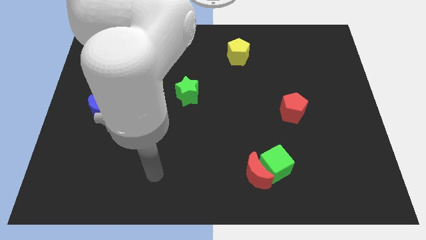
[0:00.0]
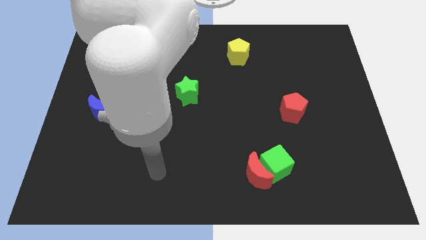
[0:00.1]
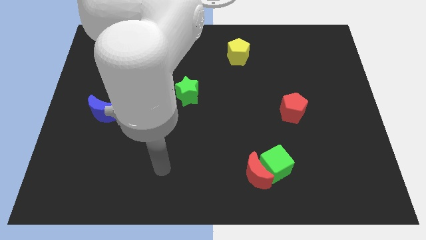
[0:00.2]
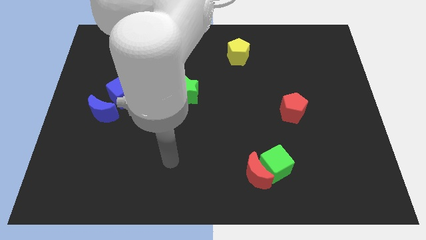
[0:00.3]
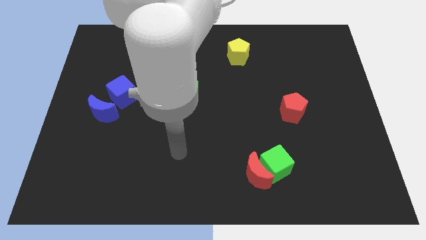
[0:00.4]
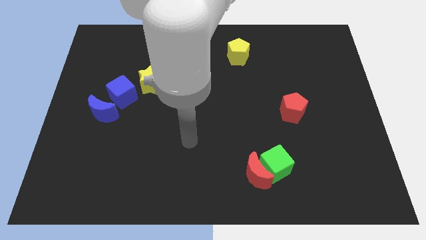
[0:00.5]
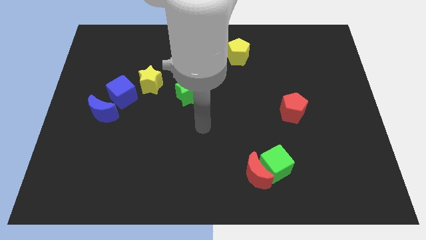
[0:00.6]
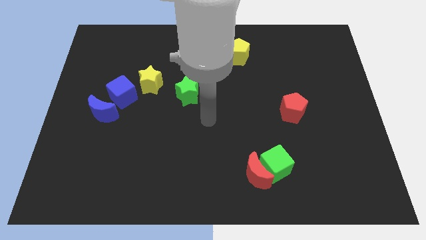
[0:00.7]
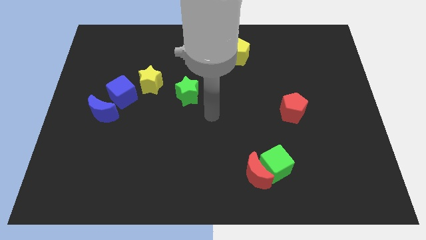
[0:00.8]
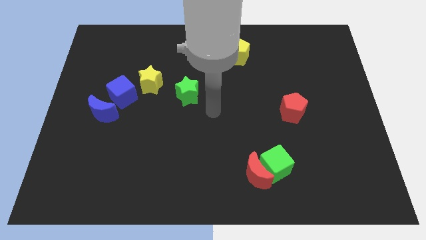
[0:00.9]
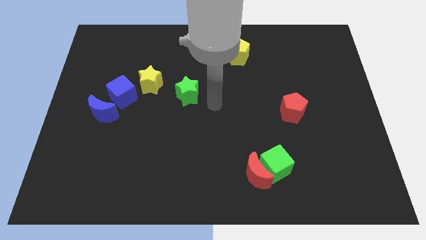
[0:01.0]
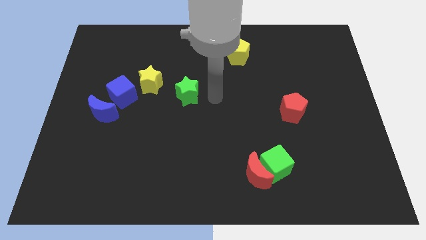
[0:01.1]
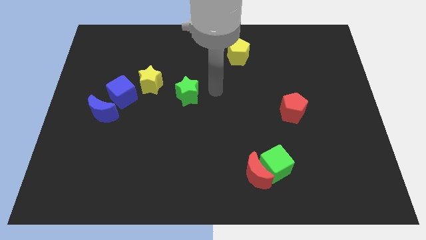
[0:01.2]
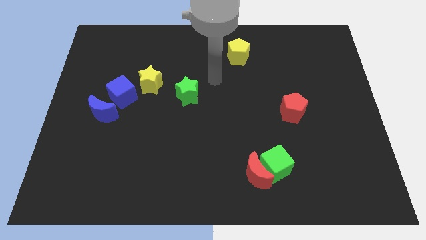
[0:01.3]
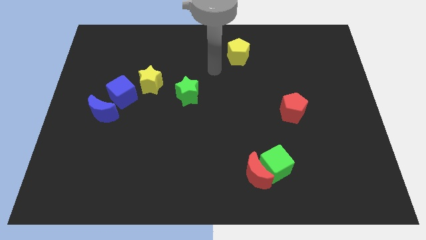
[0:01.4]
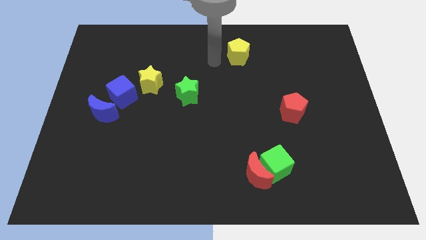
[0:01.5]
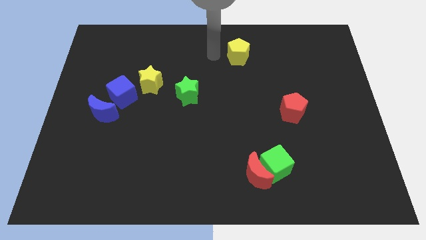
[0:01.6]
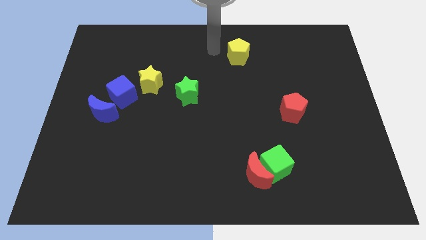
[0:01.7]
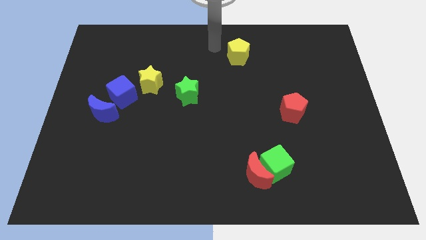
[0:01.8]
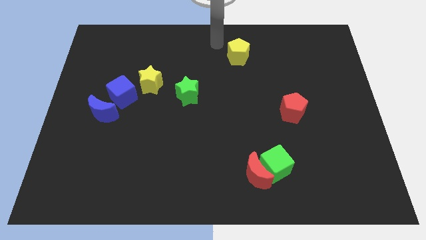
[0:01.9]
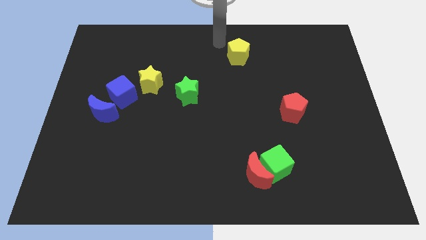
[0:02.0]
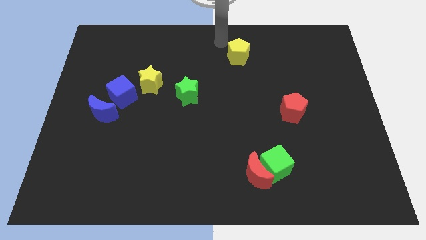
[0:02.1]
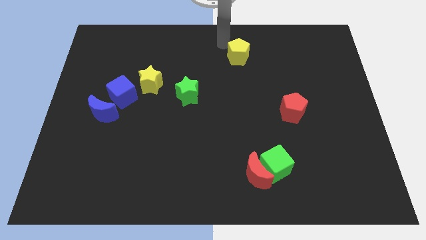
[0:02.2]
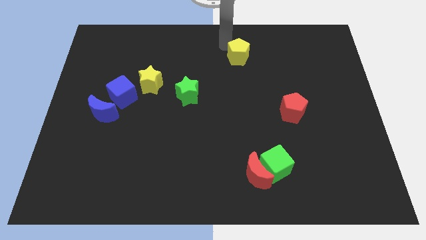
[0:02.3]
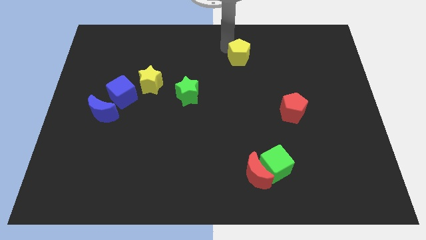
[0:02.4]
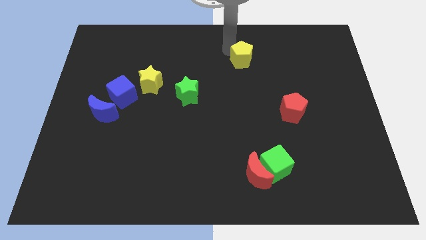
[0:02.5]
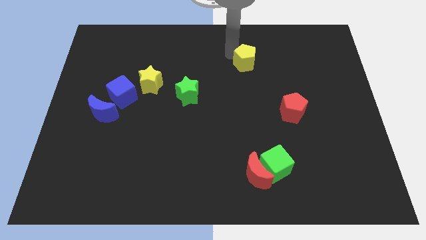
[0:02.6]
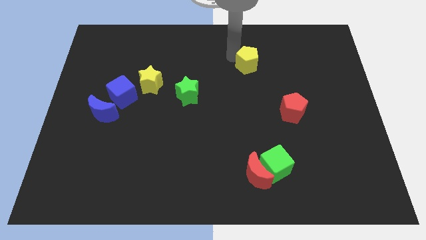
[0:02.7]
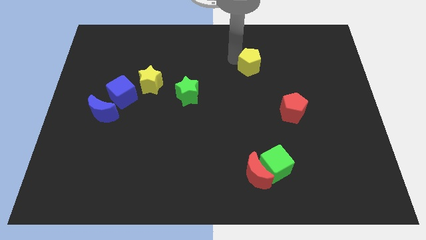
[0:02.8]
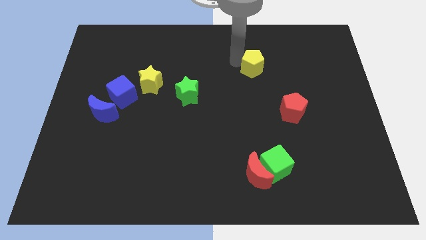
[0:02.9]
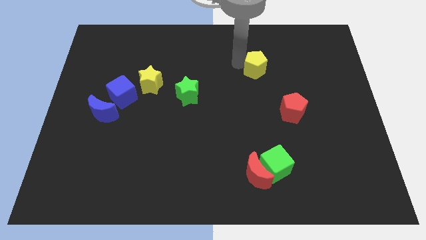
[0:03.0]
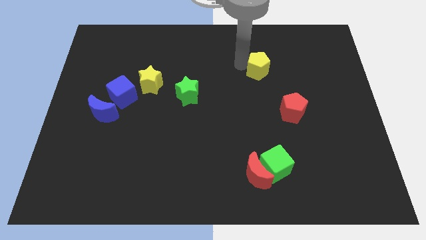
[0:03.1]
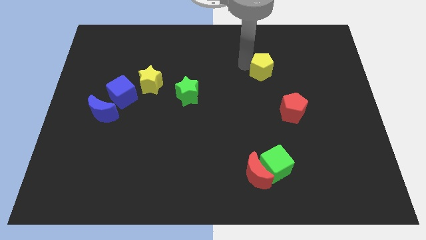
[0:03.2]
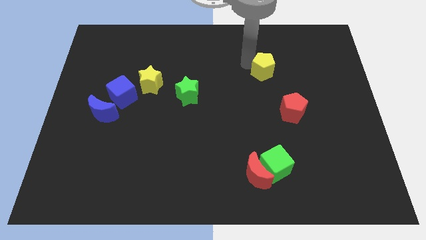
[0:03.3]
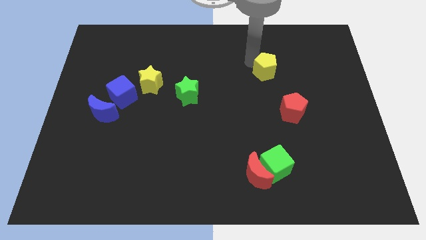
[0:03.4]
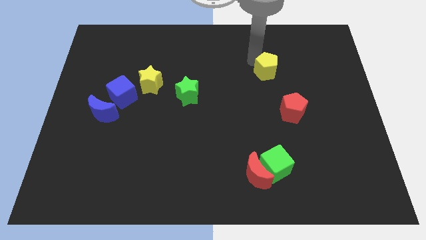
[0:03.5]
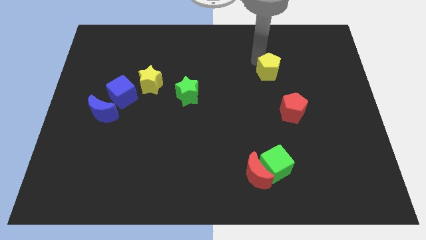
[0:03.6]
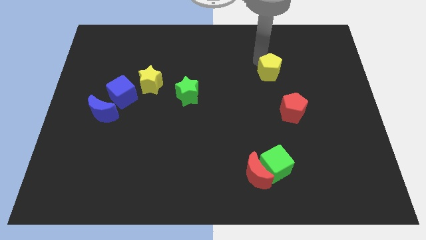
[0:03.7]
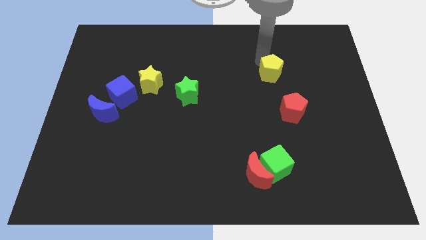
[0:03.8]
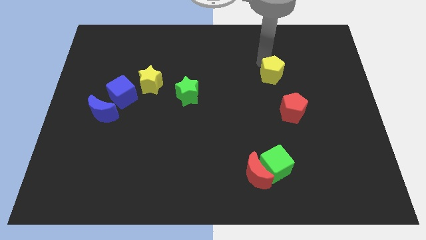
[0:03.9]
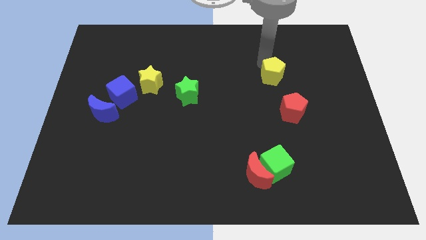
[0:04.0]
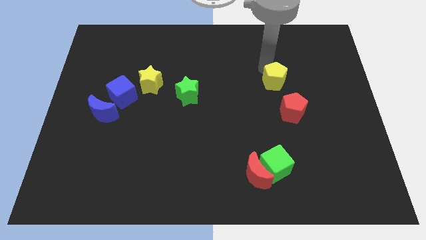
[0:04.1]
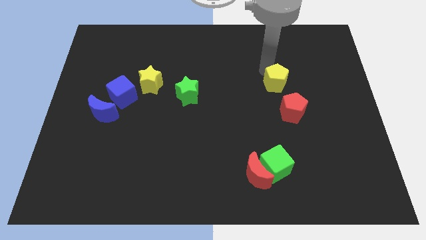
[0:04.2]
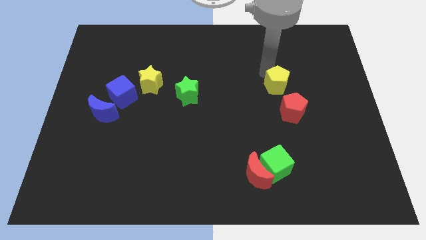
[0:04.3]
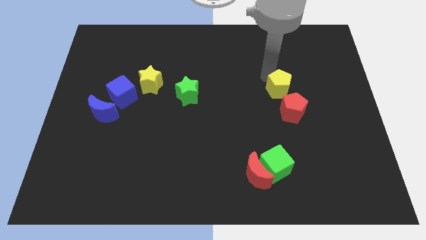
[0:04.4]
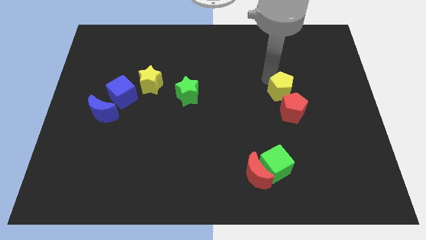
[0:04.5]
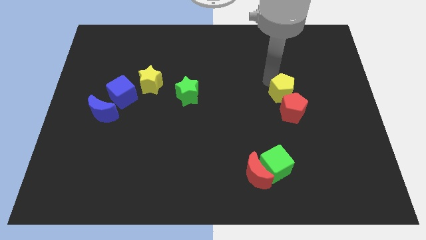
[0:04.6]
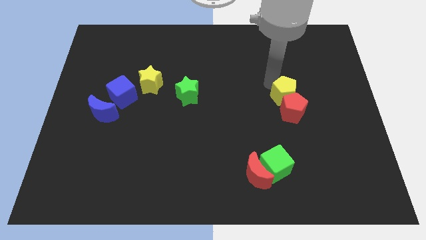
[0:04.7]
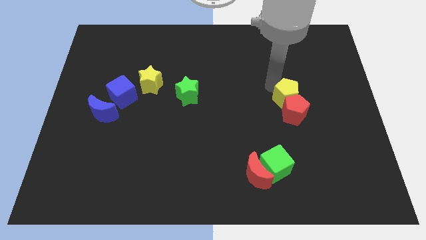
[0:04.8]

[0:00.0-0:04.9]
put the yellow pentagon next to the red pentagon

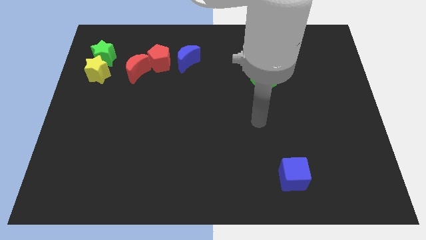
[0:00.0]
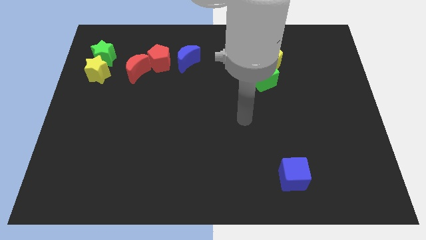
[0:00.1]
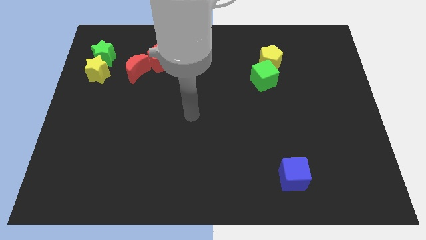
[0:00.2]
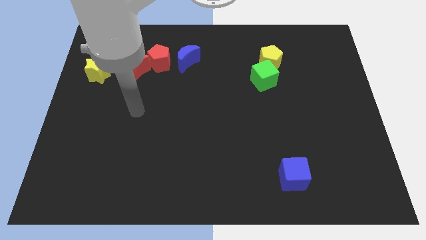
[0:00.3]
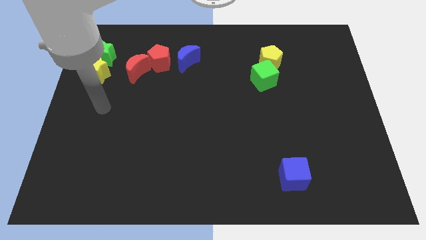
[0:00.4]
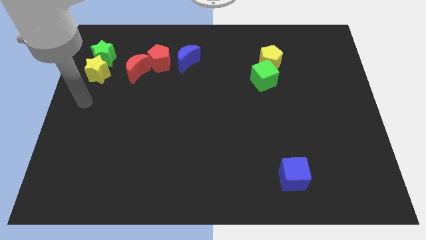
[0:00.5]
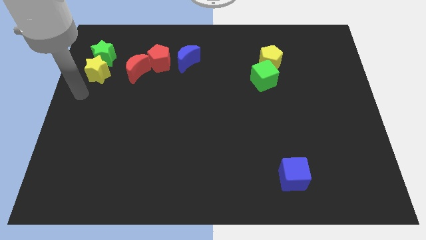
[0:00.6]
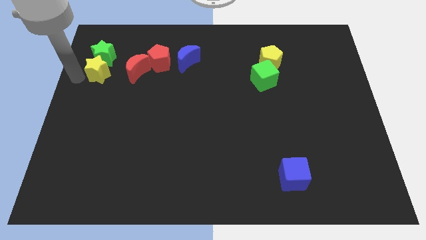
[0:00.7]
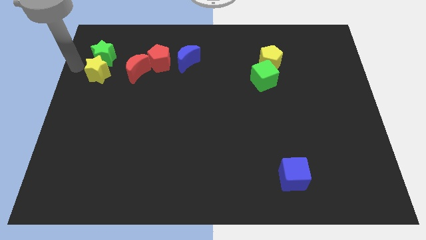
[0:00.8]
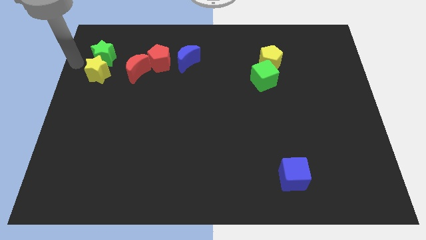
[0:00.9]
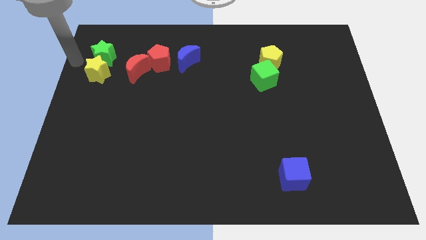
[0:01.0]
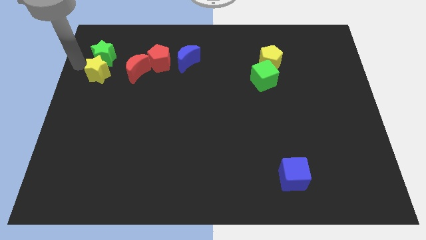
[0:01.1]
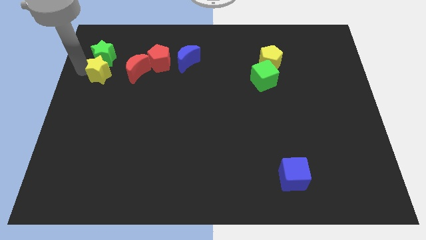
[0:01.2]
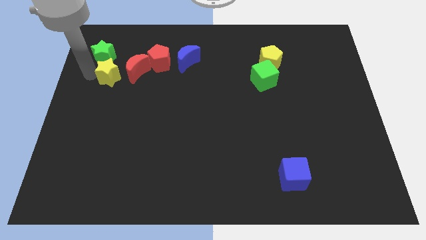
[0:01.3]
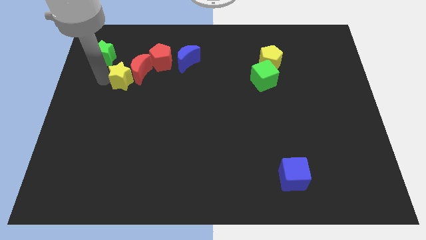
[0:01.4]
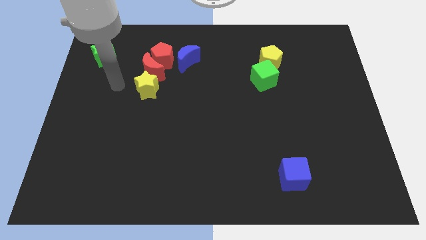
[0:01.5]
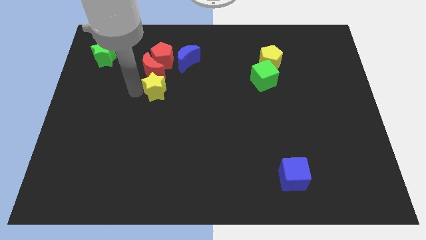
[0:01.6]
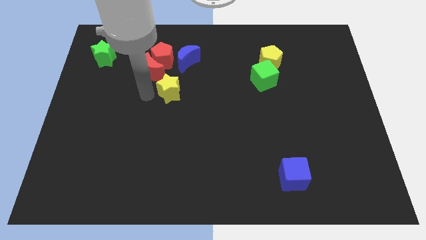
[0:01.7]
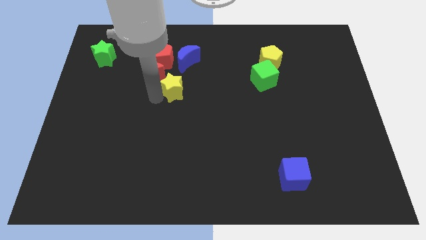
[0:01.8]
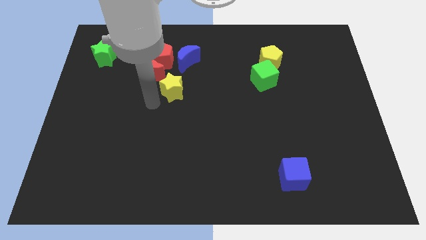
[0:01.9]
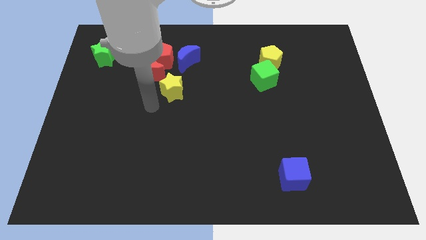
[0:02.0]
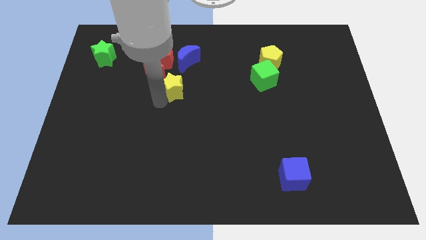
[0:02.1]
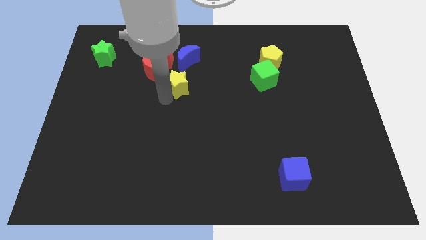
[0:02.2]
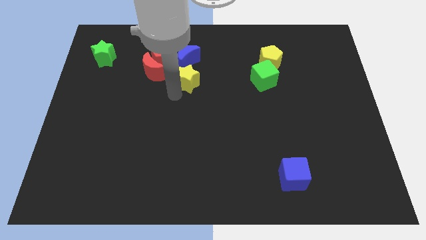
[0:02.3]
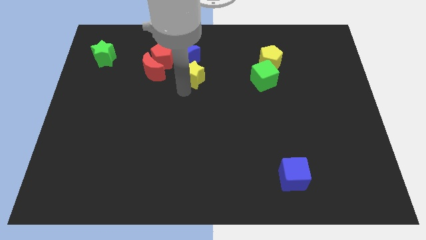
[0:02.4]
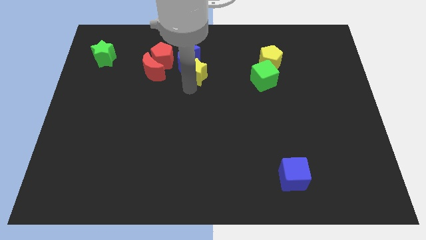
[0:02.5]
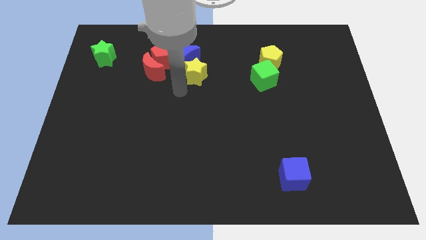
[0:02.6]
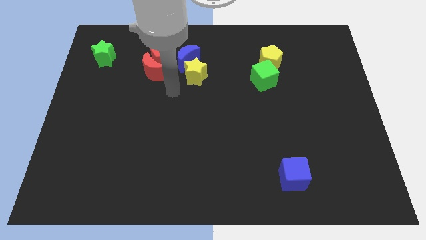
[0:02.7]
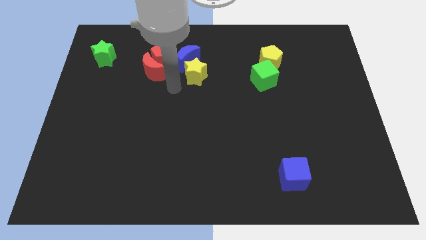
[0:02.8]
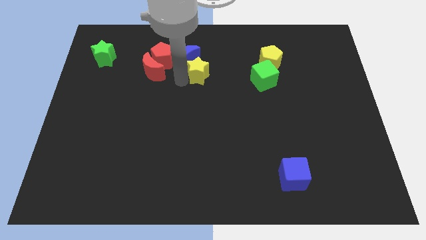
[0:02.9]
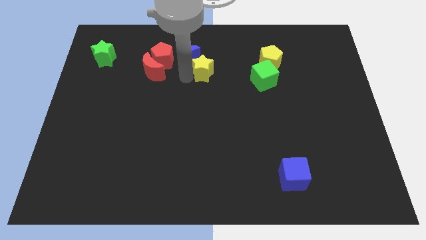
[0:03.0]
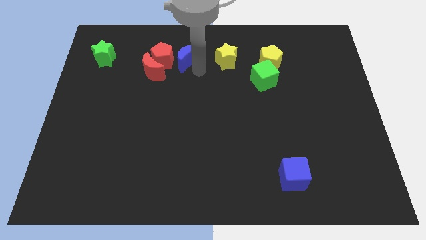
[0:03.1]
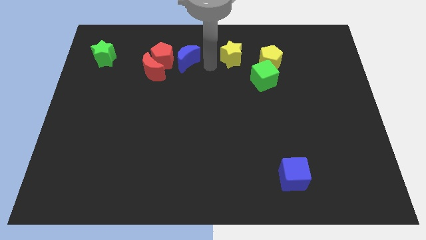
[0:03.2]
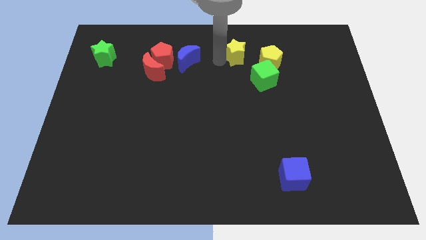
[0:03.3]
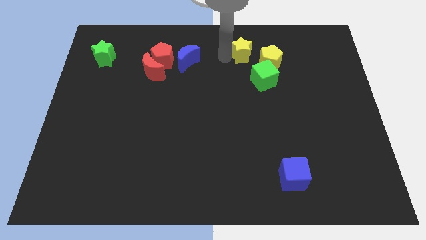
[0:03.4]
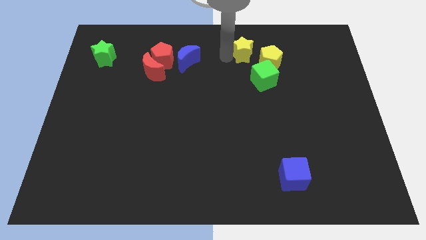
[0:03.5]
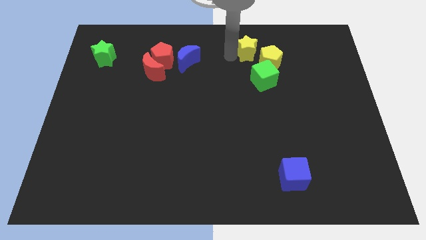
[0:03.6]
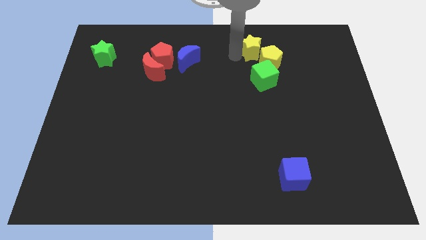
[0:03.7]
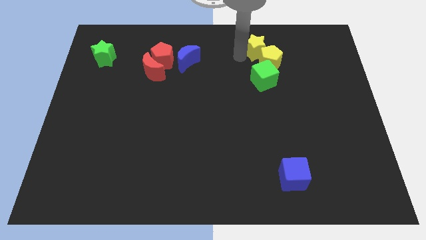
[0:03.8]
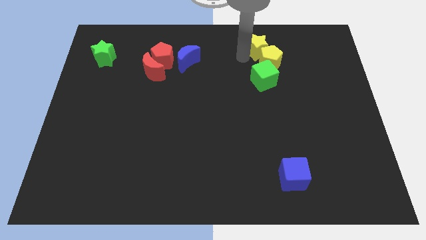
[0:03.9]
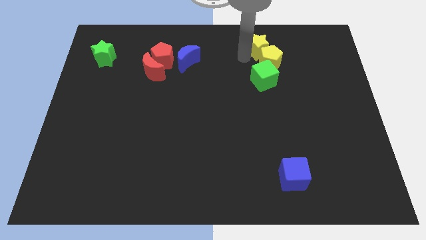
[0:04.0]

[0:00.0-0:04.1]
slide the yellow star to the yellow pentagon
